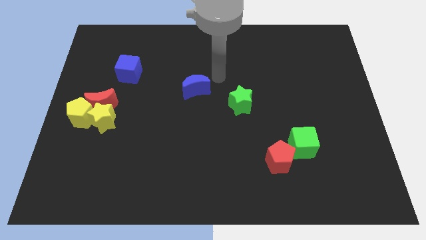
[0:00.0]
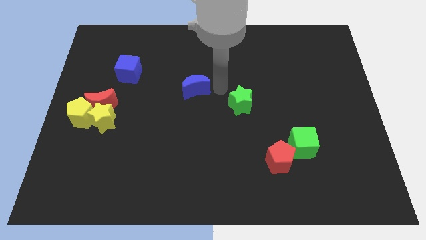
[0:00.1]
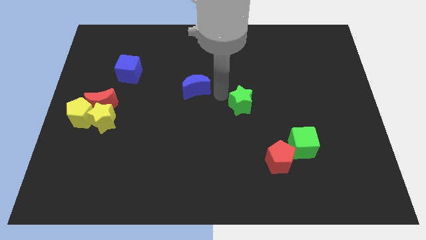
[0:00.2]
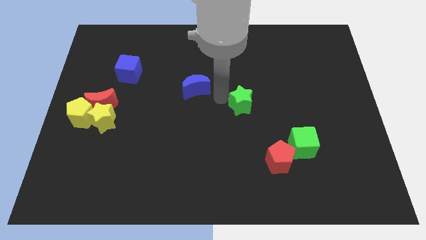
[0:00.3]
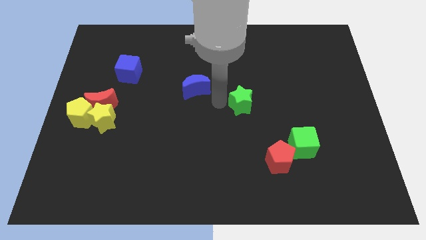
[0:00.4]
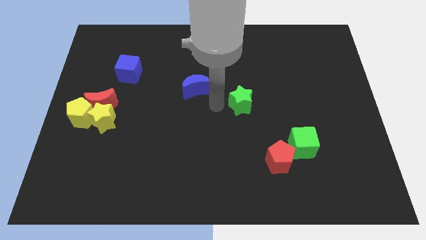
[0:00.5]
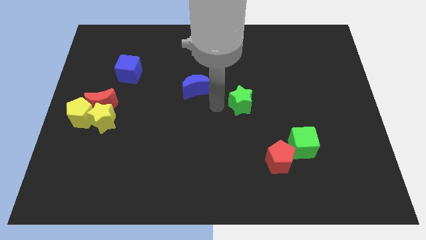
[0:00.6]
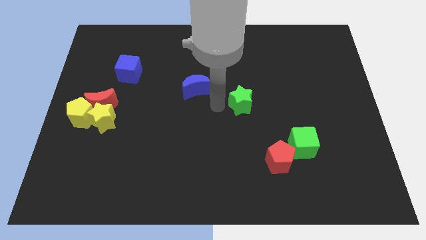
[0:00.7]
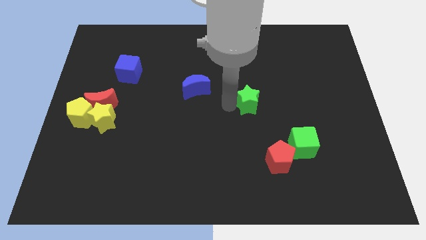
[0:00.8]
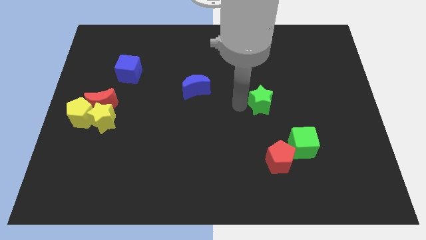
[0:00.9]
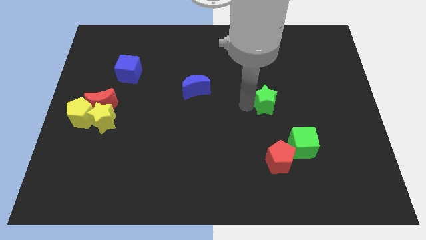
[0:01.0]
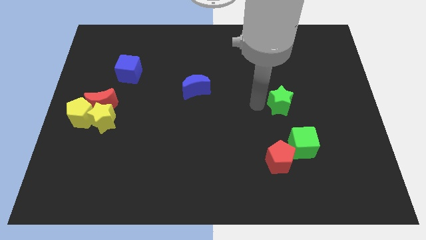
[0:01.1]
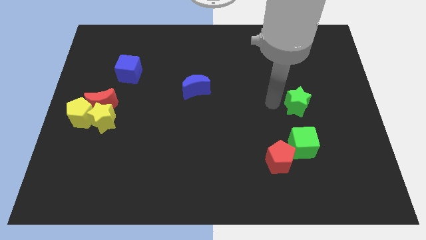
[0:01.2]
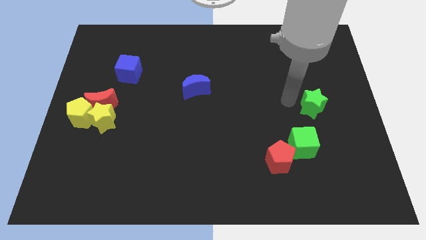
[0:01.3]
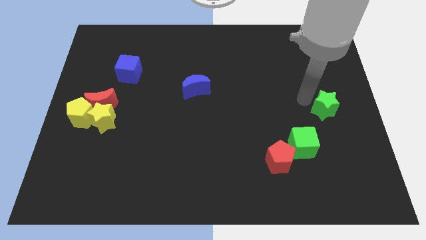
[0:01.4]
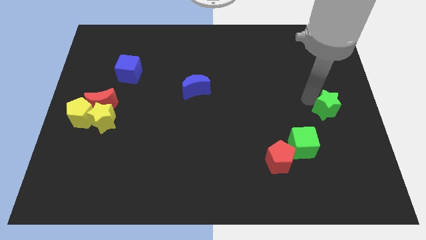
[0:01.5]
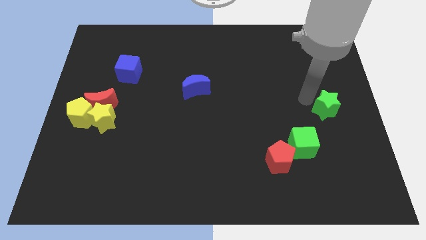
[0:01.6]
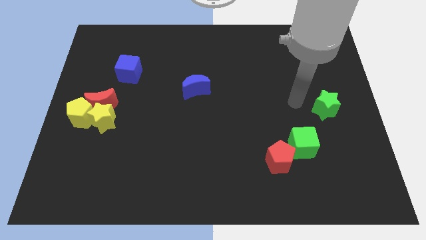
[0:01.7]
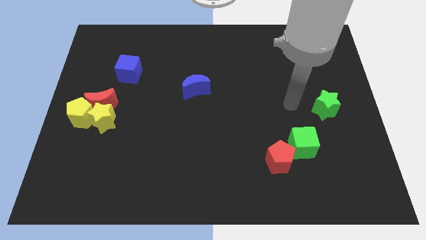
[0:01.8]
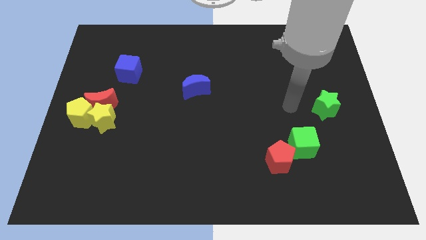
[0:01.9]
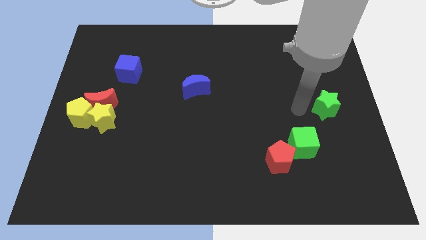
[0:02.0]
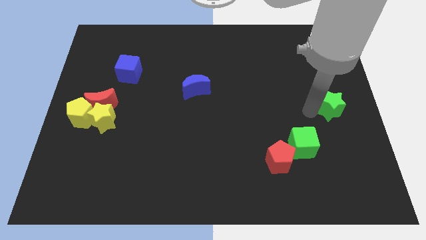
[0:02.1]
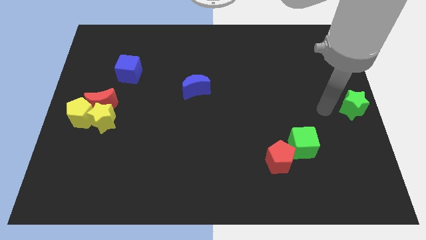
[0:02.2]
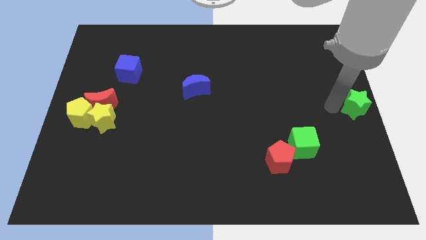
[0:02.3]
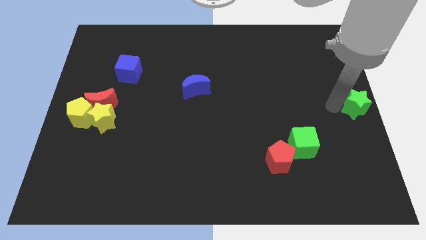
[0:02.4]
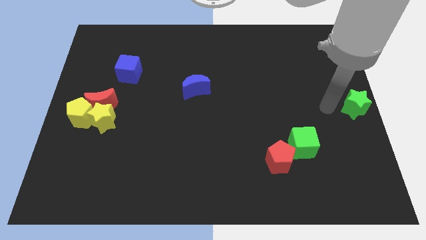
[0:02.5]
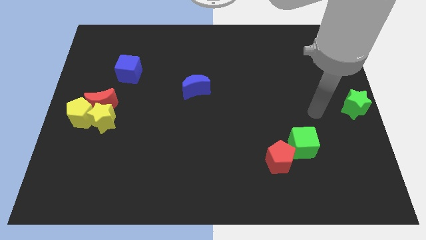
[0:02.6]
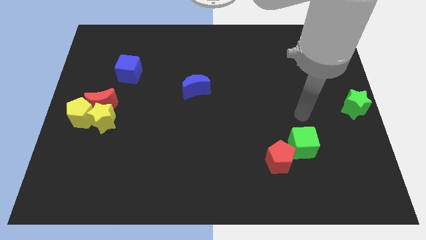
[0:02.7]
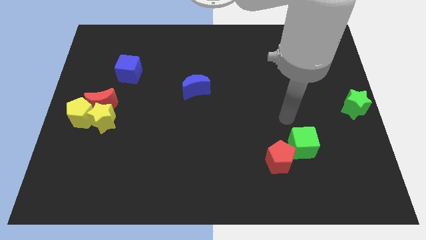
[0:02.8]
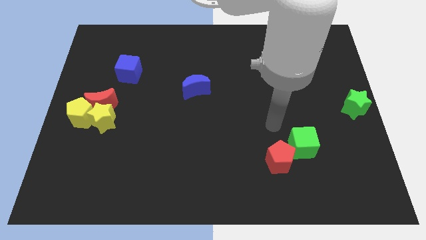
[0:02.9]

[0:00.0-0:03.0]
push green star towards right side

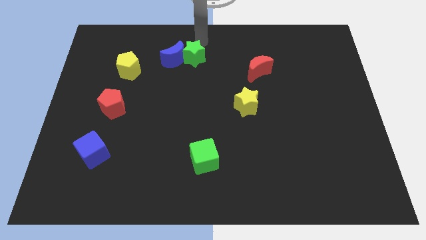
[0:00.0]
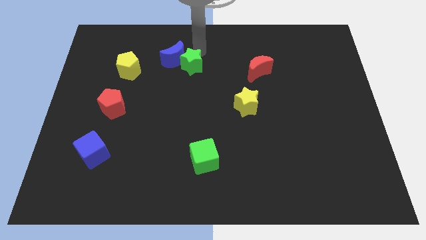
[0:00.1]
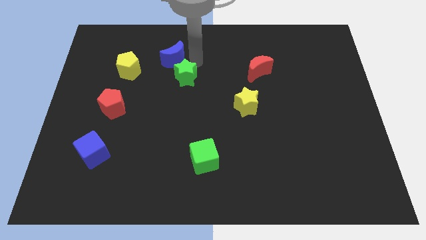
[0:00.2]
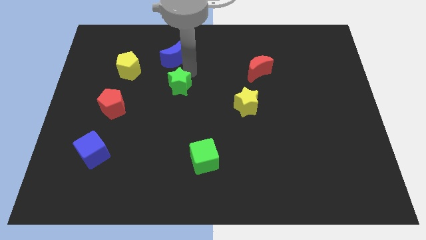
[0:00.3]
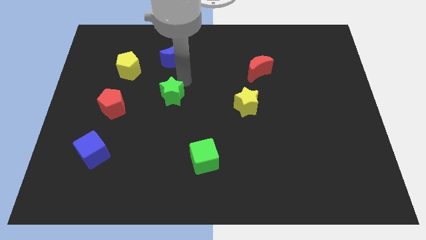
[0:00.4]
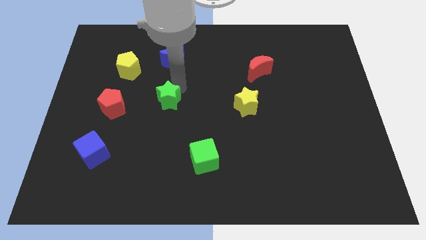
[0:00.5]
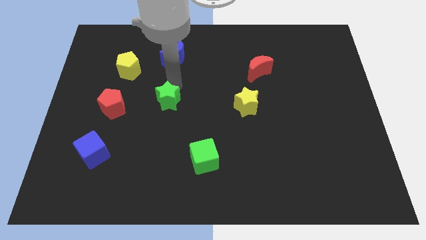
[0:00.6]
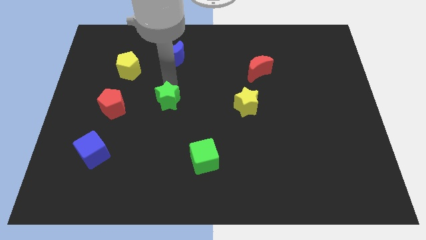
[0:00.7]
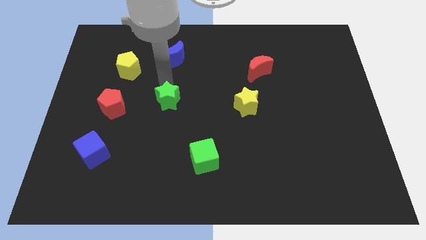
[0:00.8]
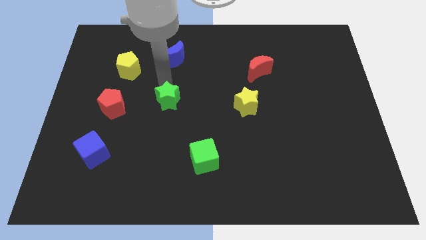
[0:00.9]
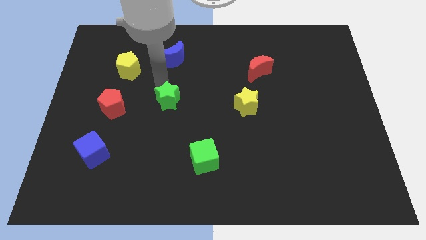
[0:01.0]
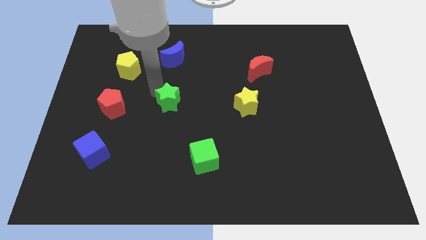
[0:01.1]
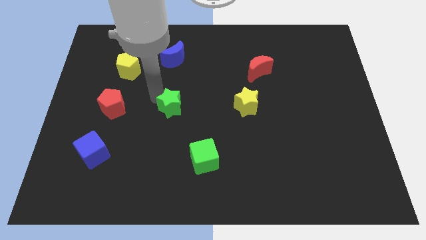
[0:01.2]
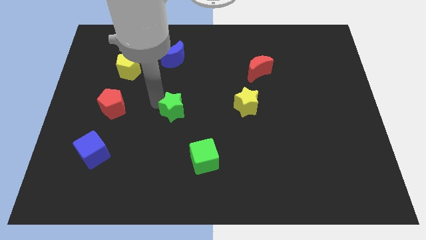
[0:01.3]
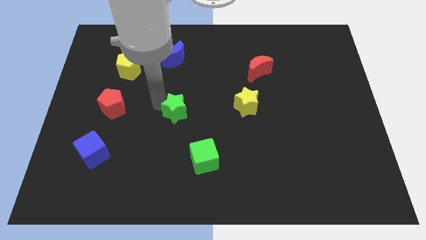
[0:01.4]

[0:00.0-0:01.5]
place the green star right to the red pentagon

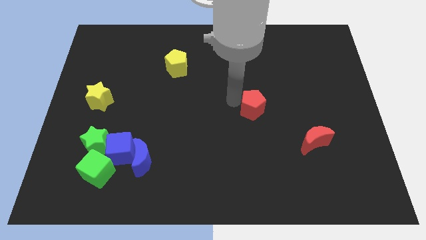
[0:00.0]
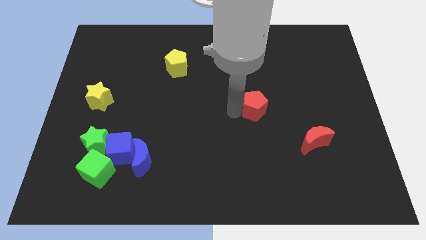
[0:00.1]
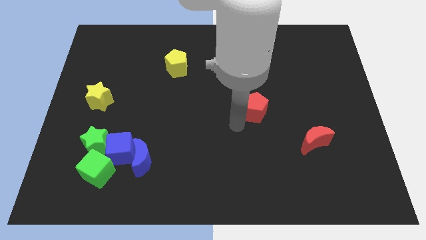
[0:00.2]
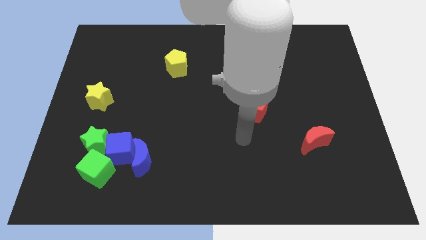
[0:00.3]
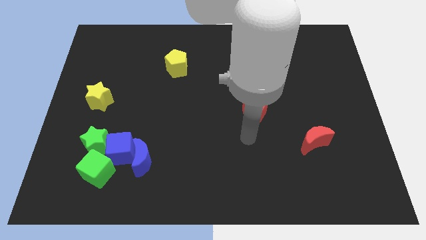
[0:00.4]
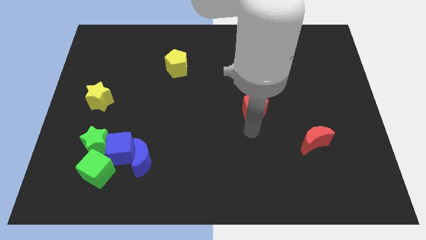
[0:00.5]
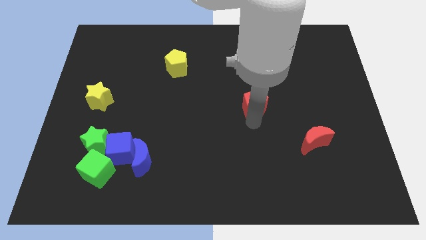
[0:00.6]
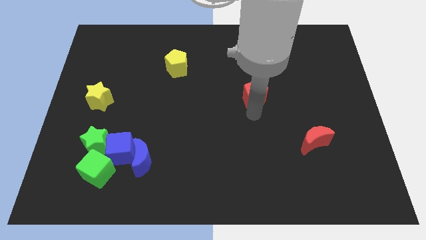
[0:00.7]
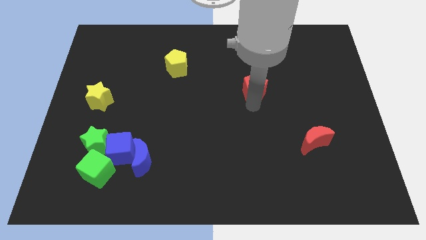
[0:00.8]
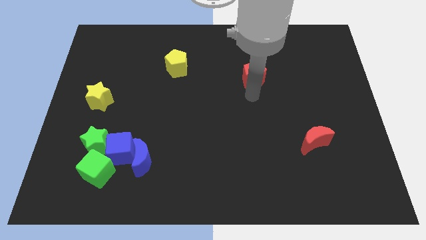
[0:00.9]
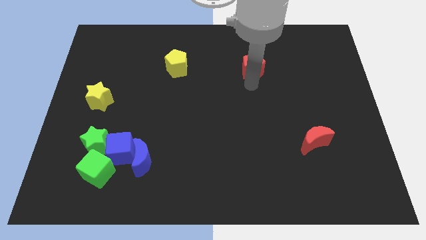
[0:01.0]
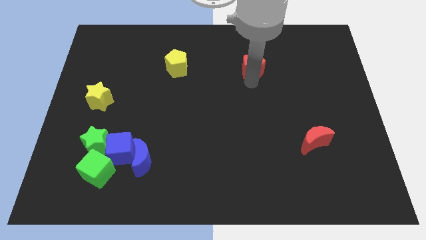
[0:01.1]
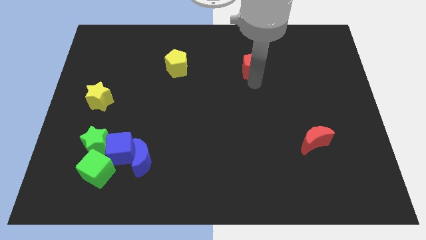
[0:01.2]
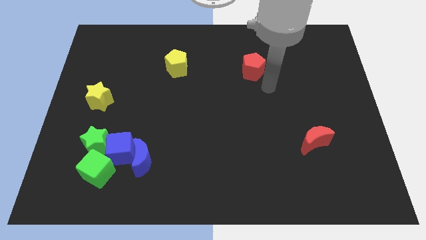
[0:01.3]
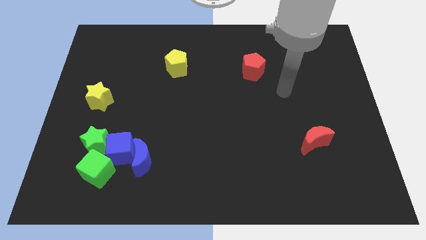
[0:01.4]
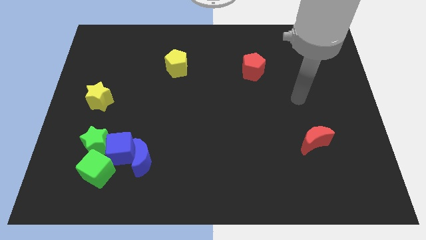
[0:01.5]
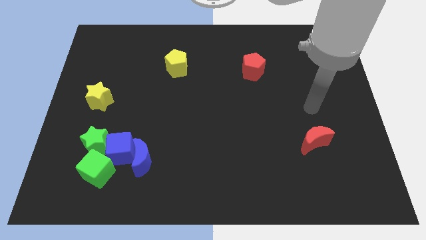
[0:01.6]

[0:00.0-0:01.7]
put the red pentagon parallel right to the yellow pentagon

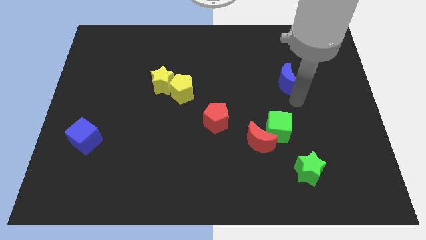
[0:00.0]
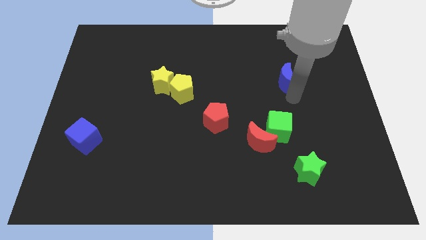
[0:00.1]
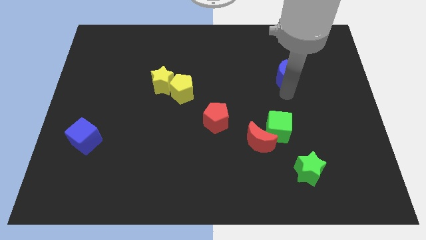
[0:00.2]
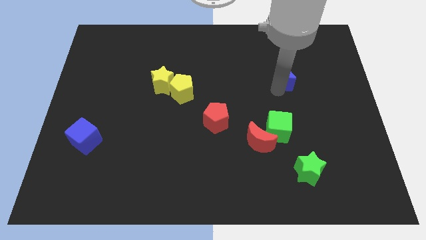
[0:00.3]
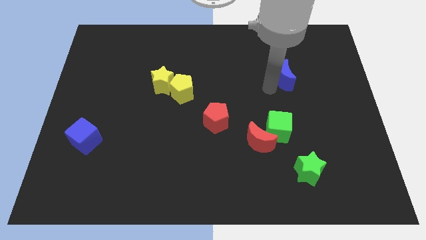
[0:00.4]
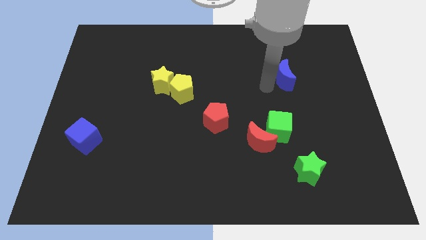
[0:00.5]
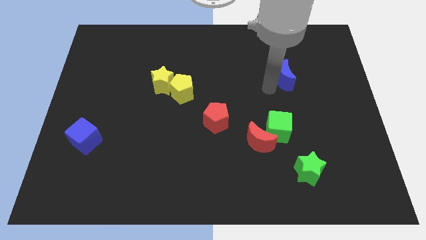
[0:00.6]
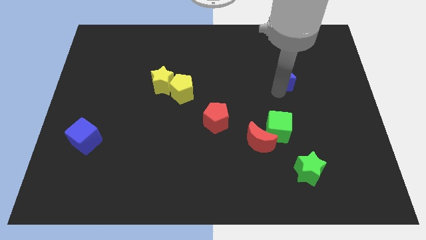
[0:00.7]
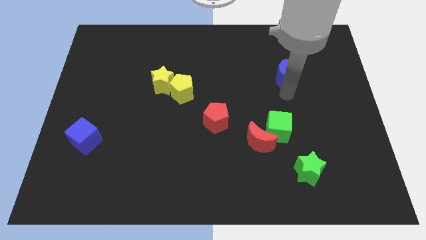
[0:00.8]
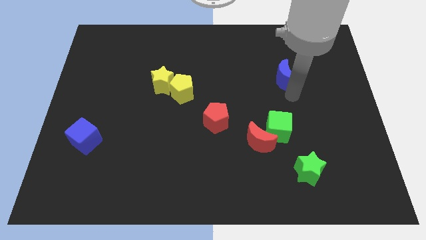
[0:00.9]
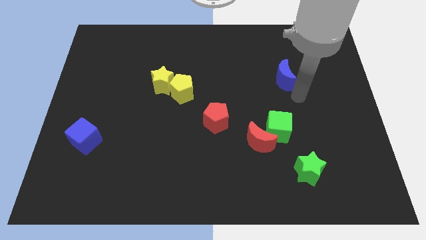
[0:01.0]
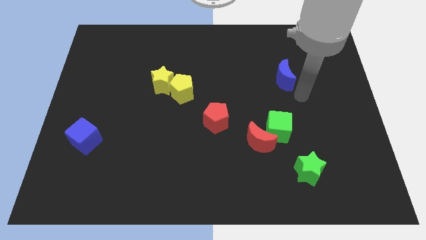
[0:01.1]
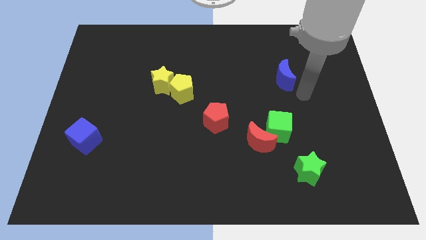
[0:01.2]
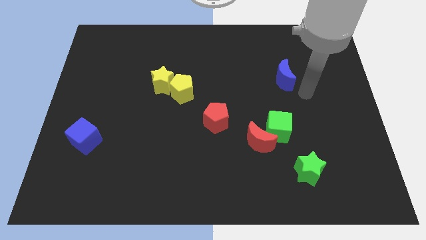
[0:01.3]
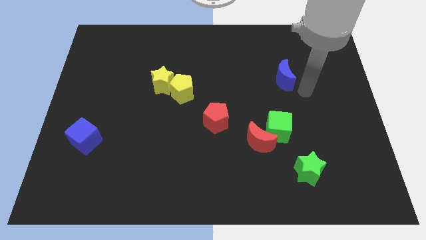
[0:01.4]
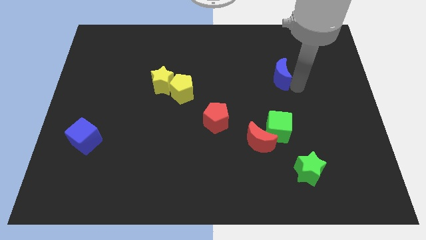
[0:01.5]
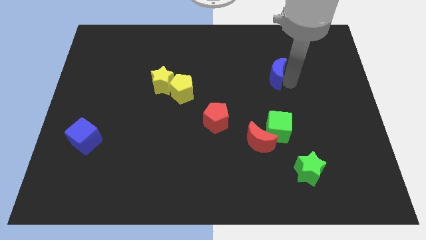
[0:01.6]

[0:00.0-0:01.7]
put the blue crescent vertically on top of green cube

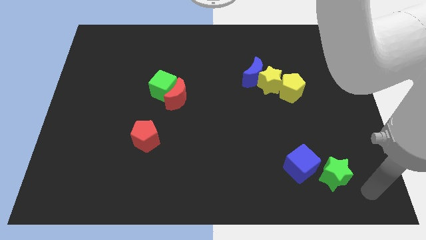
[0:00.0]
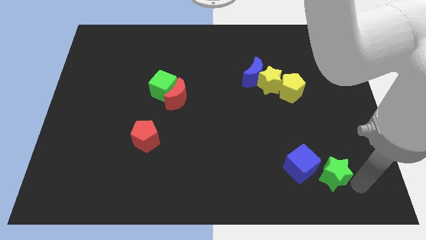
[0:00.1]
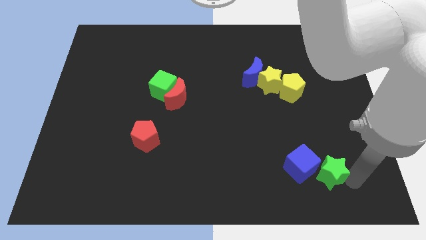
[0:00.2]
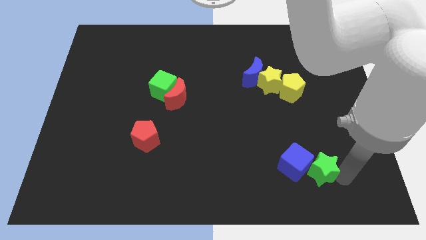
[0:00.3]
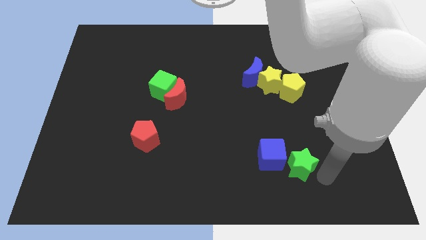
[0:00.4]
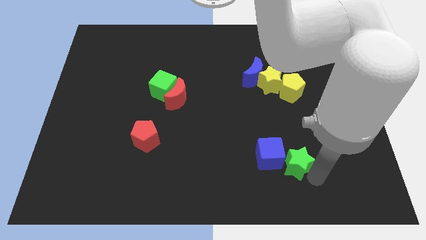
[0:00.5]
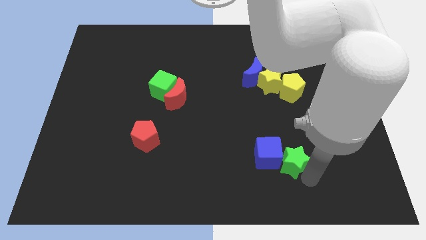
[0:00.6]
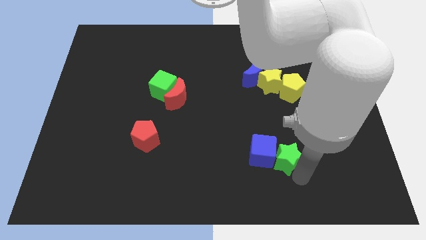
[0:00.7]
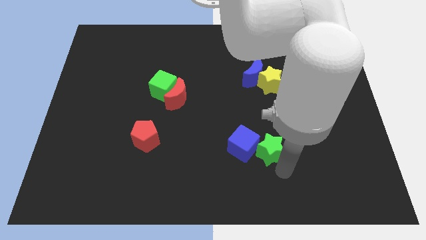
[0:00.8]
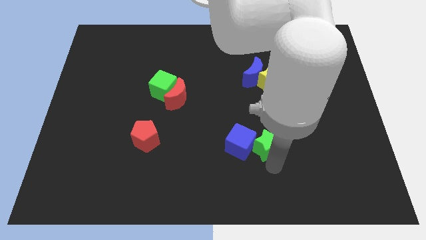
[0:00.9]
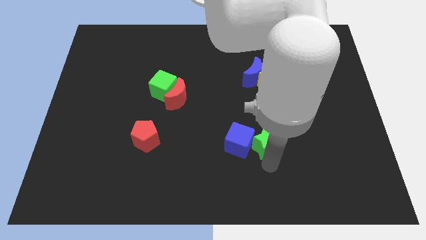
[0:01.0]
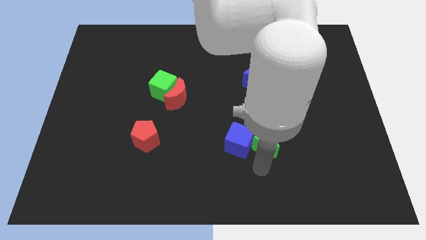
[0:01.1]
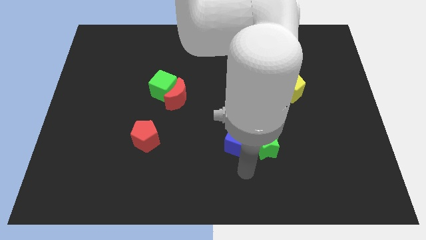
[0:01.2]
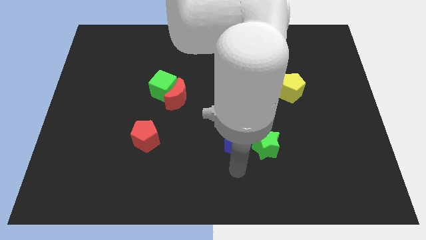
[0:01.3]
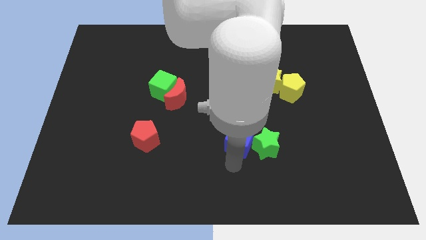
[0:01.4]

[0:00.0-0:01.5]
push the green star into the blue cube
